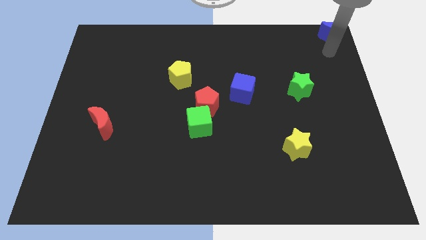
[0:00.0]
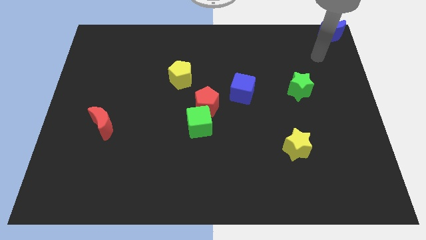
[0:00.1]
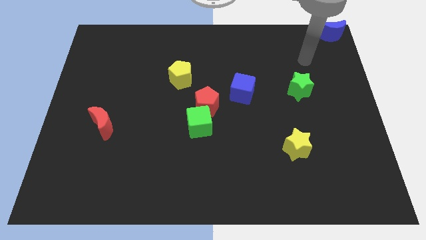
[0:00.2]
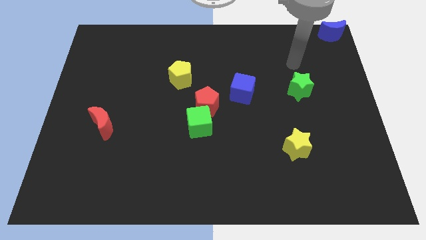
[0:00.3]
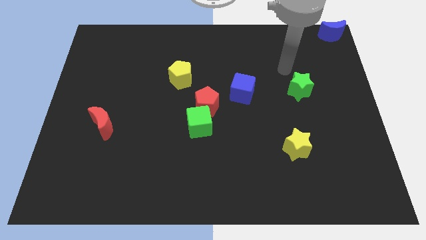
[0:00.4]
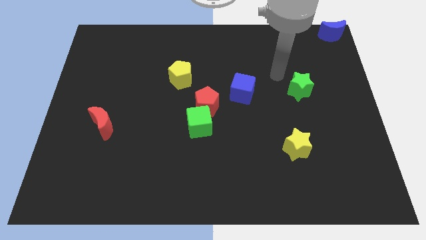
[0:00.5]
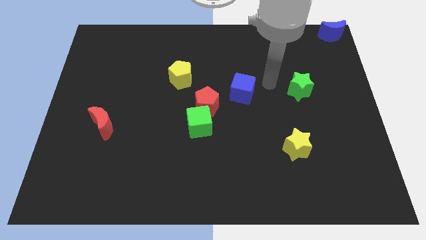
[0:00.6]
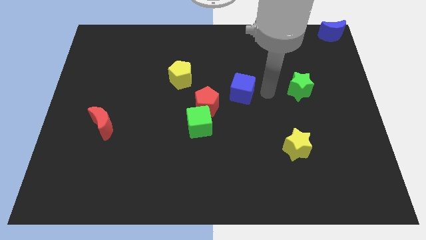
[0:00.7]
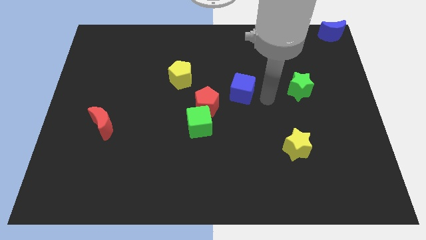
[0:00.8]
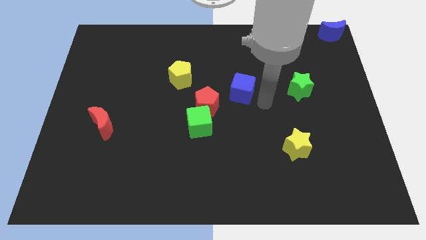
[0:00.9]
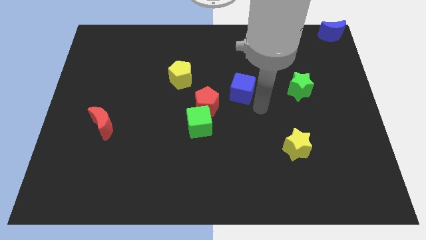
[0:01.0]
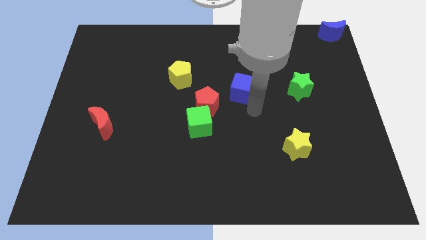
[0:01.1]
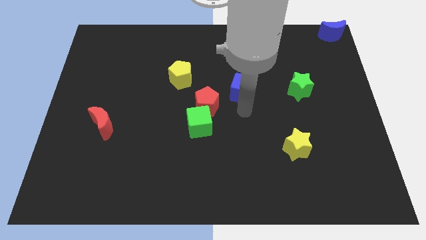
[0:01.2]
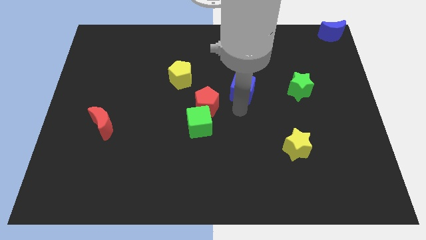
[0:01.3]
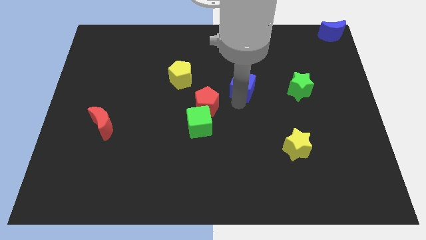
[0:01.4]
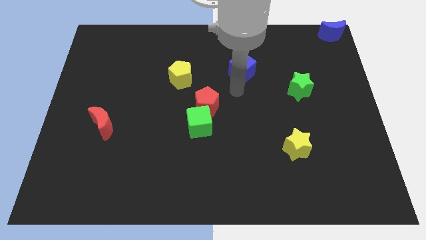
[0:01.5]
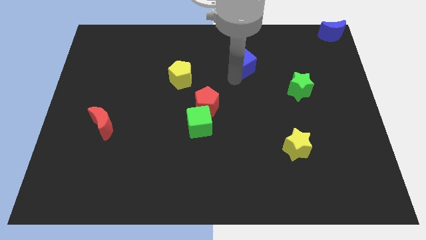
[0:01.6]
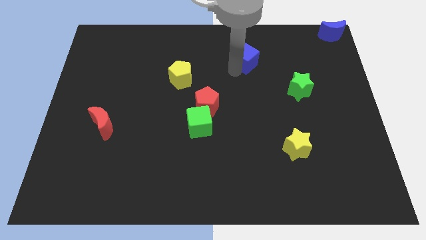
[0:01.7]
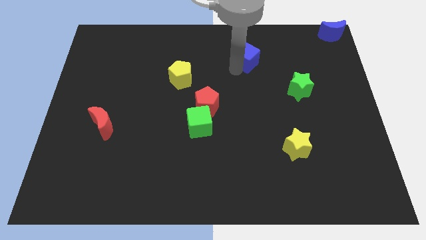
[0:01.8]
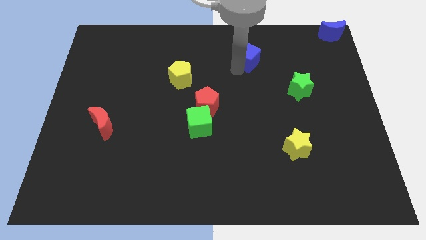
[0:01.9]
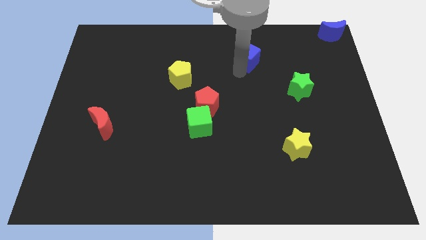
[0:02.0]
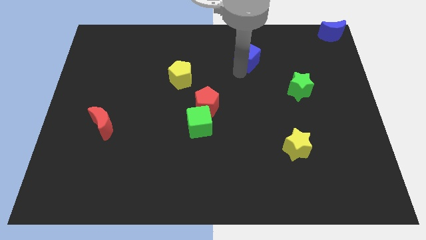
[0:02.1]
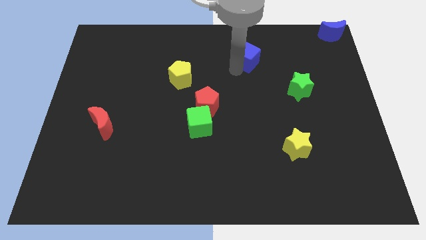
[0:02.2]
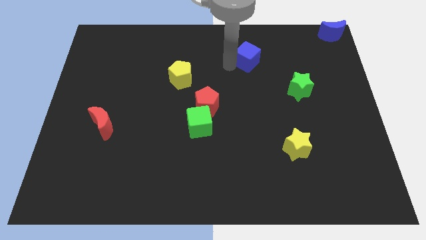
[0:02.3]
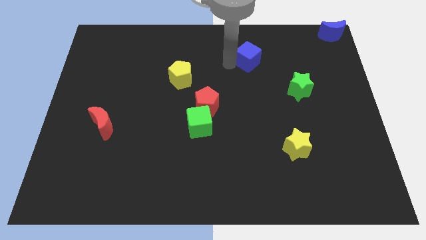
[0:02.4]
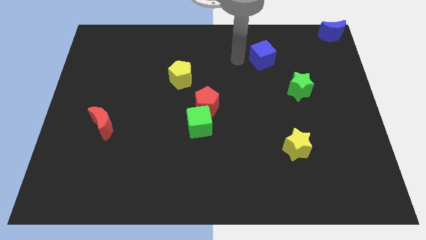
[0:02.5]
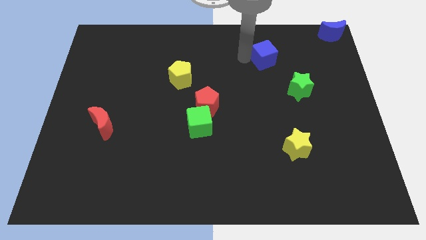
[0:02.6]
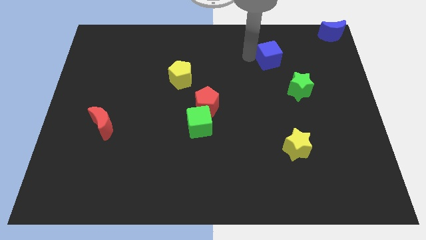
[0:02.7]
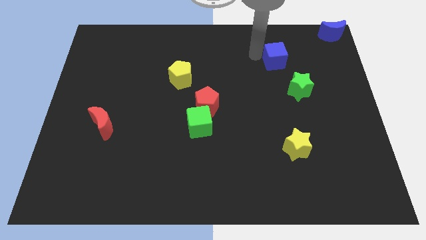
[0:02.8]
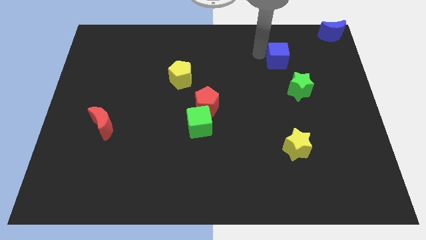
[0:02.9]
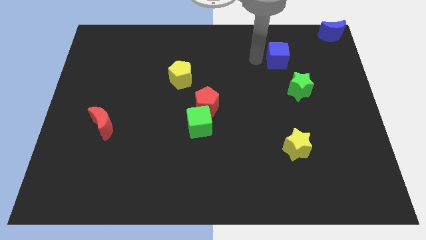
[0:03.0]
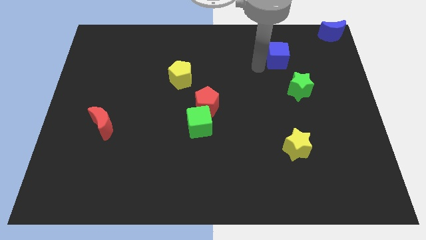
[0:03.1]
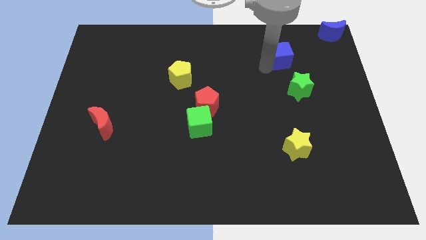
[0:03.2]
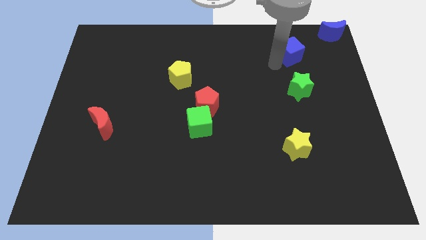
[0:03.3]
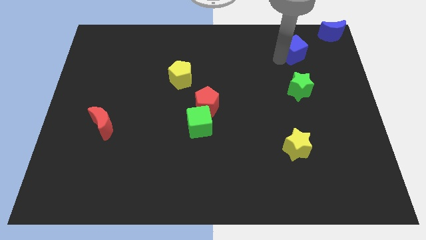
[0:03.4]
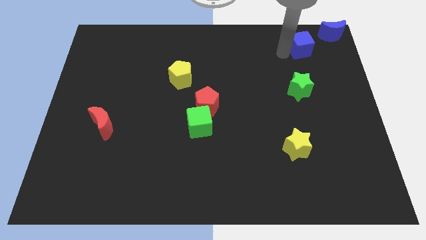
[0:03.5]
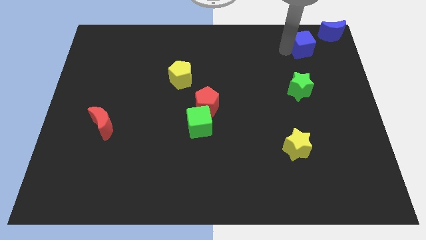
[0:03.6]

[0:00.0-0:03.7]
push the blue cube above the green star

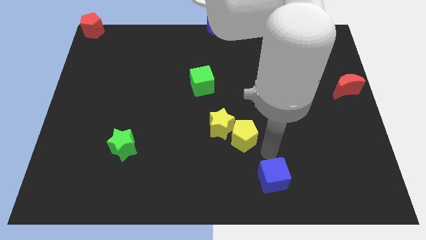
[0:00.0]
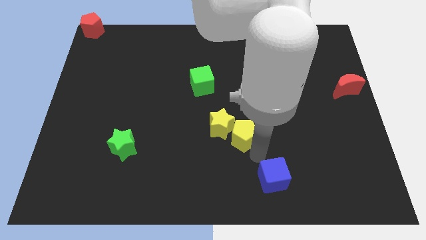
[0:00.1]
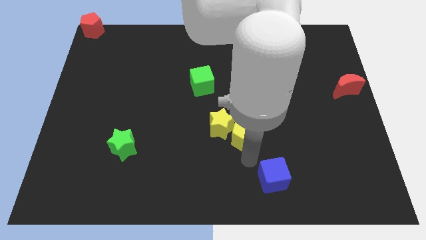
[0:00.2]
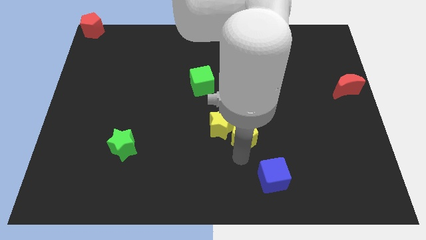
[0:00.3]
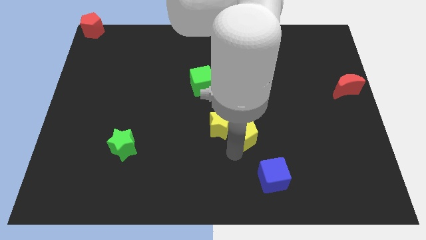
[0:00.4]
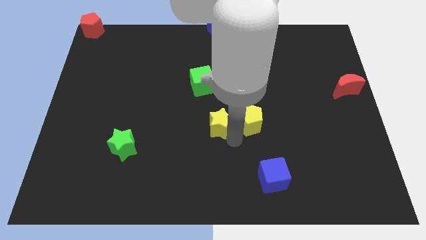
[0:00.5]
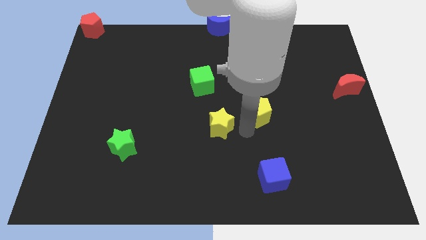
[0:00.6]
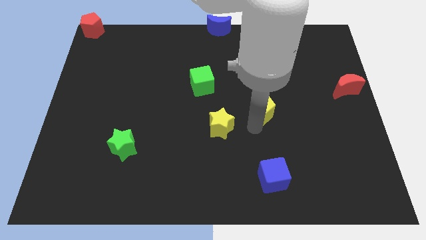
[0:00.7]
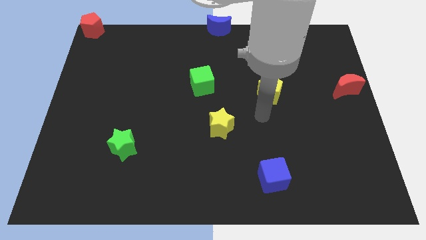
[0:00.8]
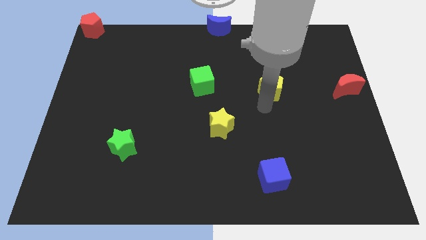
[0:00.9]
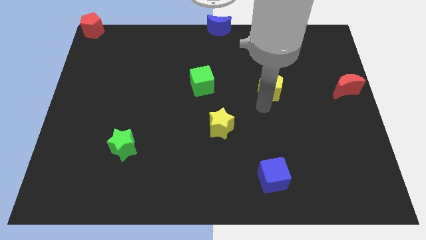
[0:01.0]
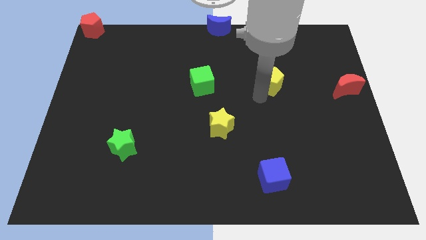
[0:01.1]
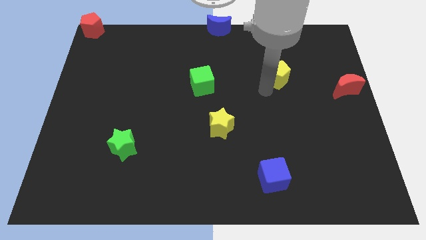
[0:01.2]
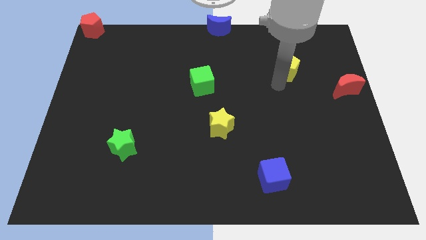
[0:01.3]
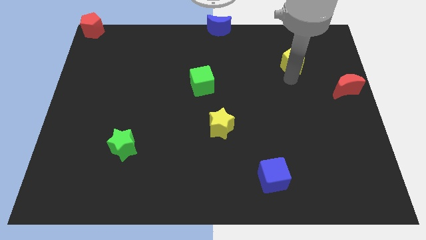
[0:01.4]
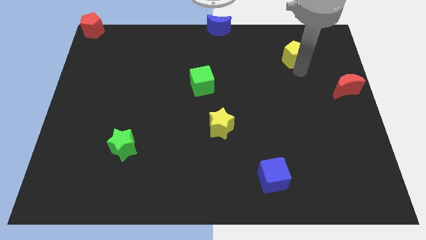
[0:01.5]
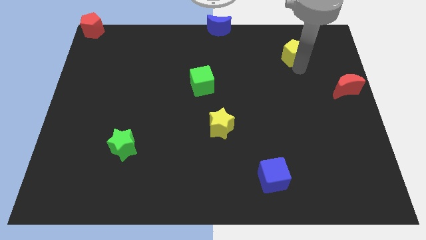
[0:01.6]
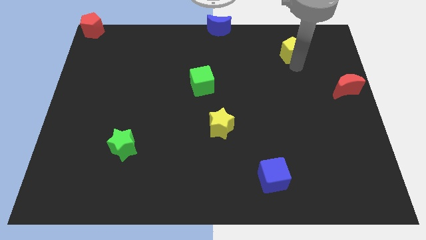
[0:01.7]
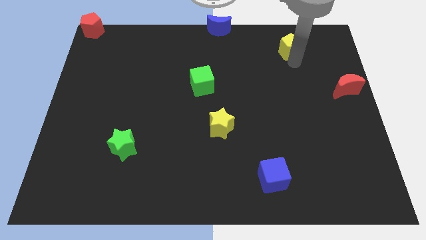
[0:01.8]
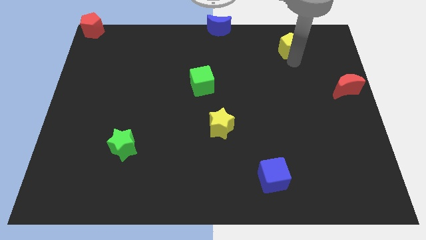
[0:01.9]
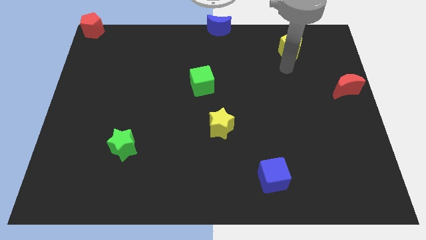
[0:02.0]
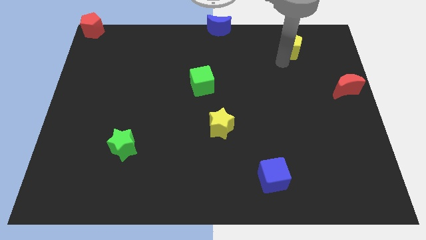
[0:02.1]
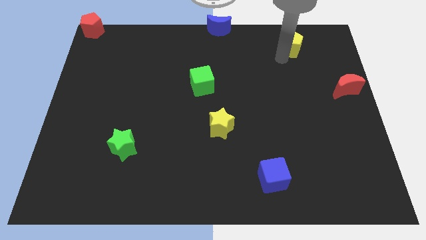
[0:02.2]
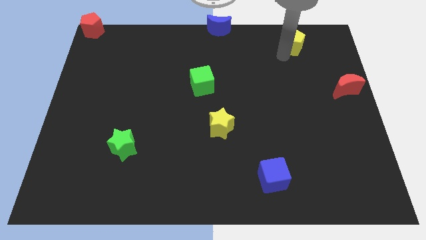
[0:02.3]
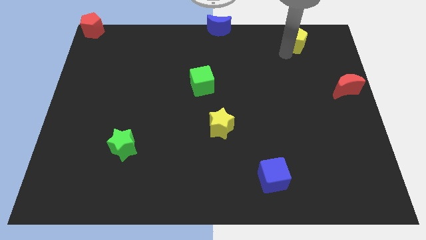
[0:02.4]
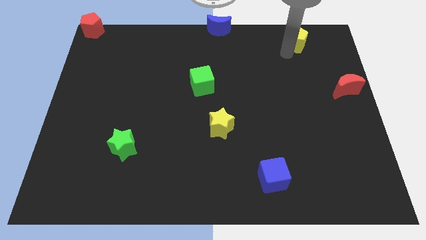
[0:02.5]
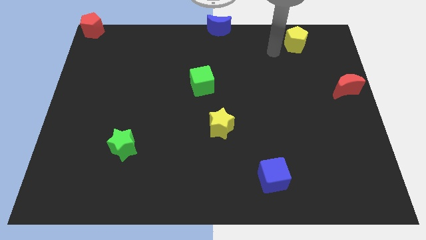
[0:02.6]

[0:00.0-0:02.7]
separate yellow pentagon from yellow star

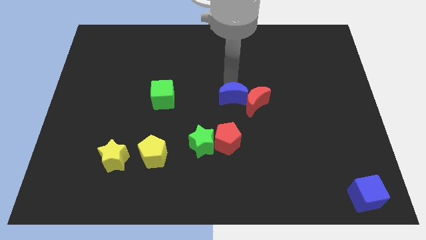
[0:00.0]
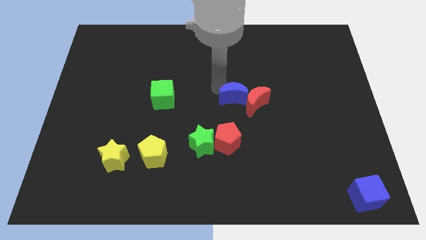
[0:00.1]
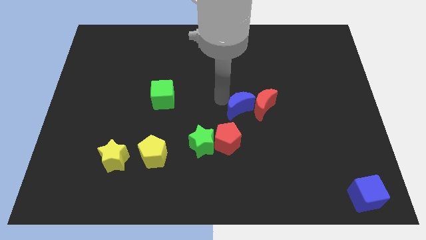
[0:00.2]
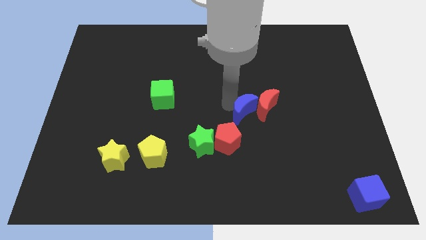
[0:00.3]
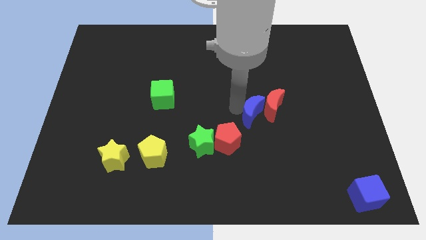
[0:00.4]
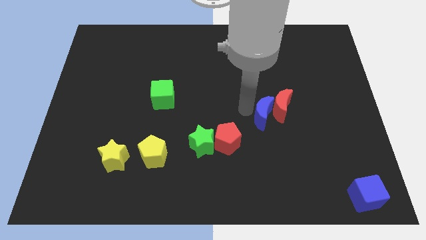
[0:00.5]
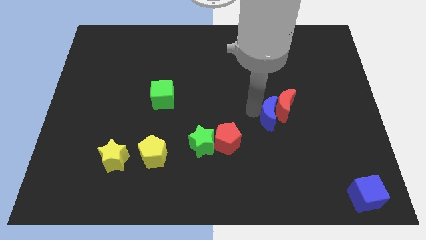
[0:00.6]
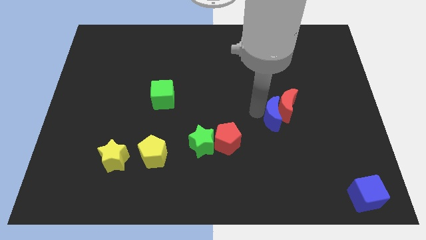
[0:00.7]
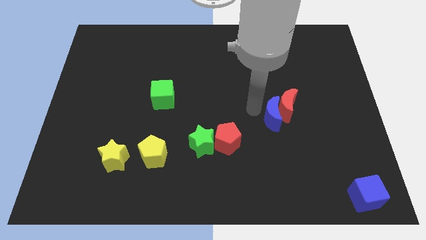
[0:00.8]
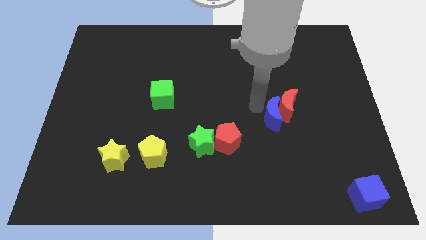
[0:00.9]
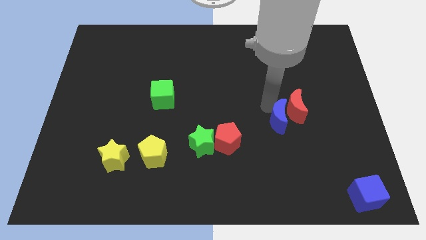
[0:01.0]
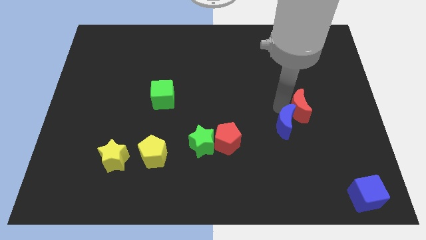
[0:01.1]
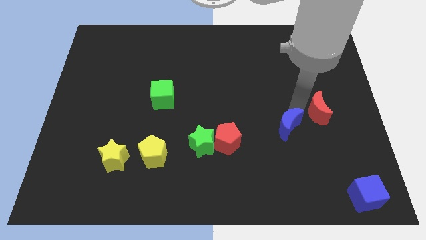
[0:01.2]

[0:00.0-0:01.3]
push the blue crescent along with the red crescent slightly to the right

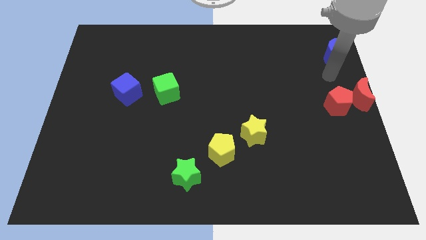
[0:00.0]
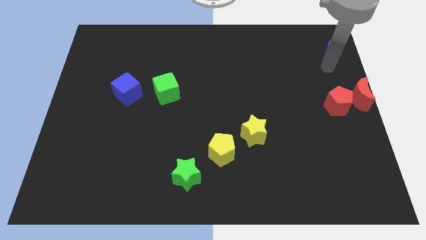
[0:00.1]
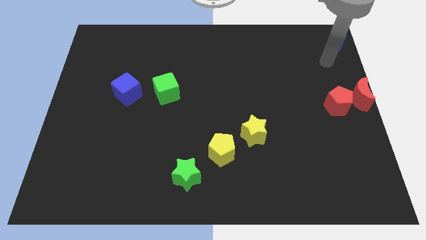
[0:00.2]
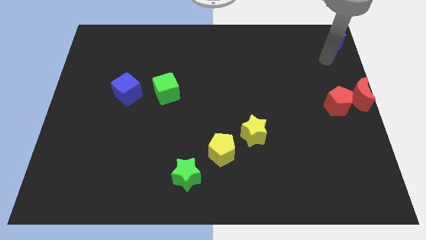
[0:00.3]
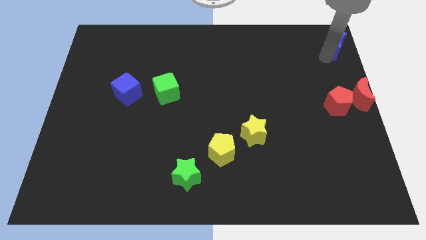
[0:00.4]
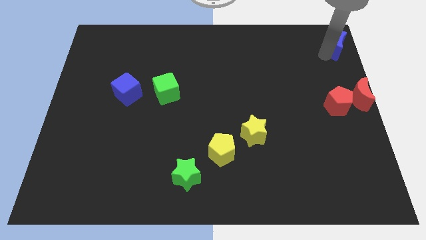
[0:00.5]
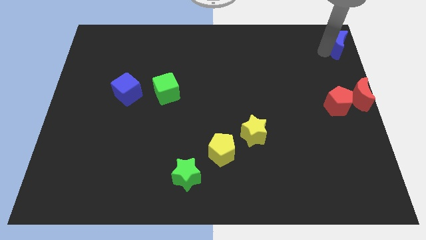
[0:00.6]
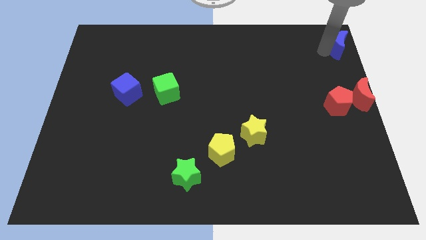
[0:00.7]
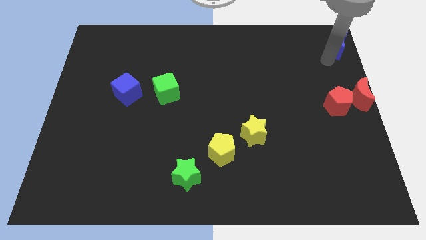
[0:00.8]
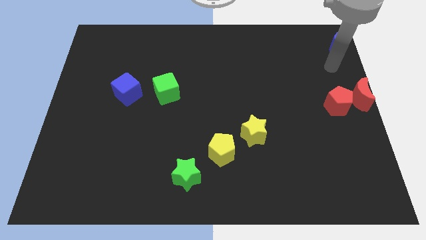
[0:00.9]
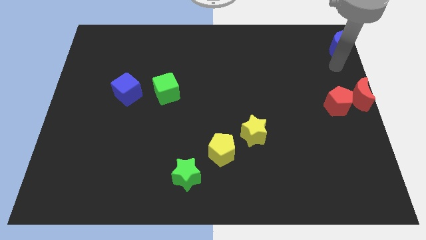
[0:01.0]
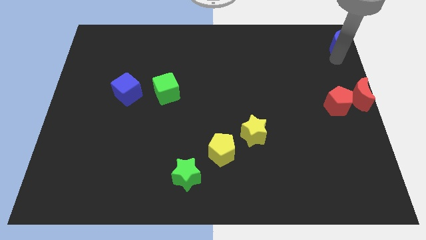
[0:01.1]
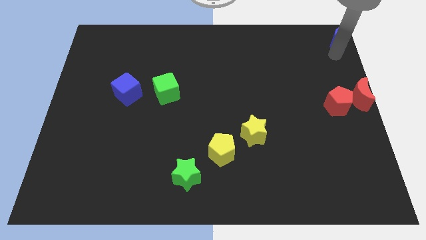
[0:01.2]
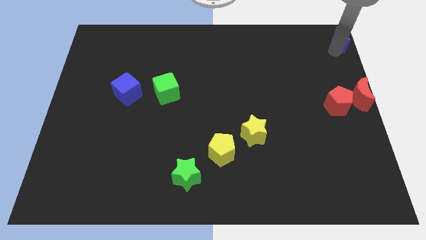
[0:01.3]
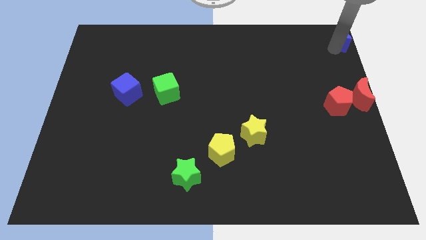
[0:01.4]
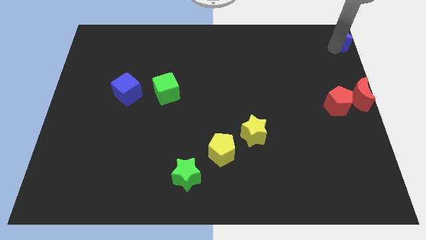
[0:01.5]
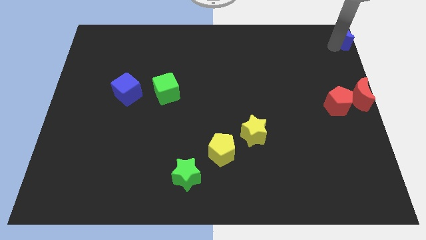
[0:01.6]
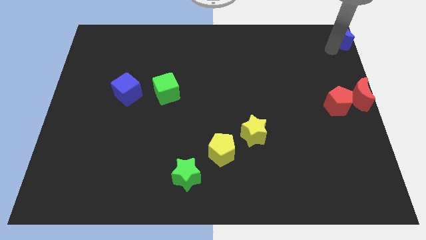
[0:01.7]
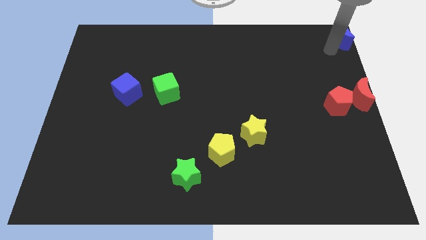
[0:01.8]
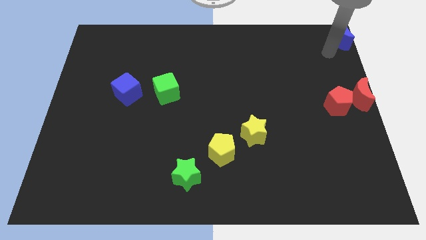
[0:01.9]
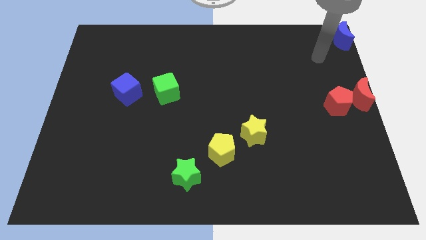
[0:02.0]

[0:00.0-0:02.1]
place the blue crescent at the top right corner of the board
